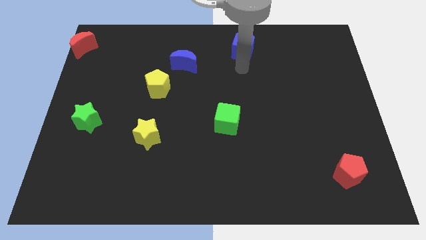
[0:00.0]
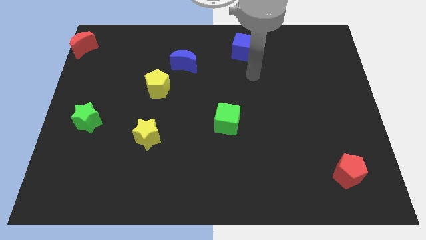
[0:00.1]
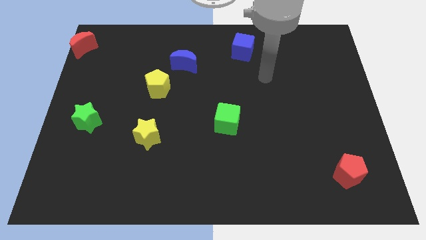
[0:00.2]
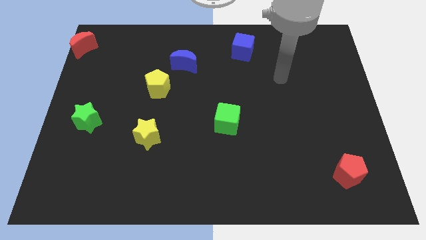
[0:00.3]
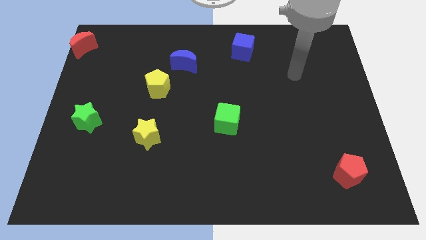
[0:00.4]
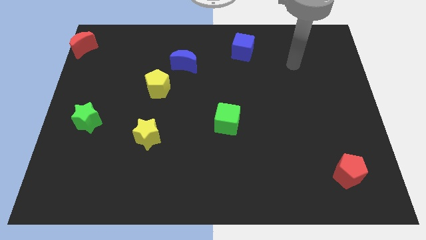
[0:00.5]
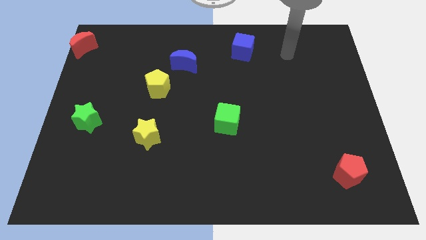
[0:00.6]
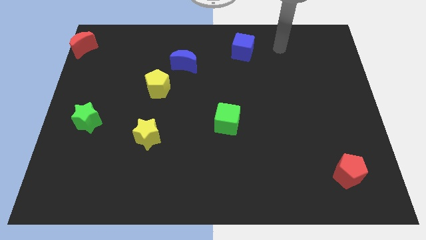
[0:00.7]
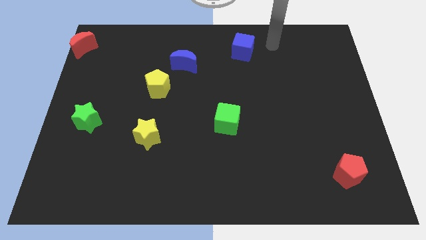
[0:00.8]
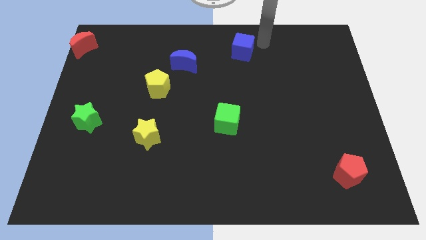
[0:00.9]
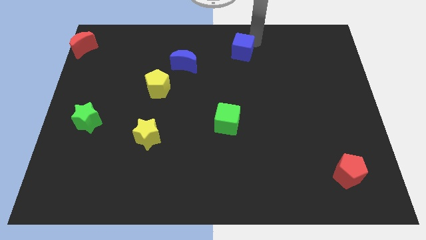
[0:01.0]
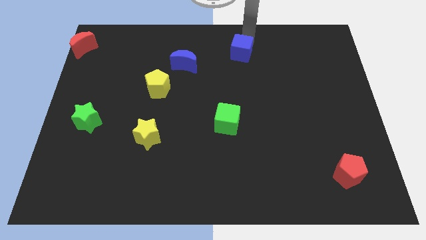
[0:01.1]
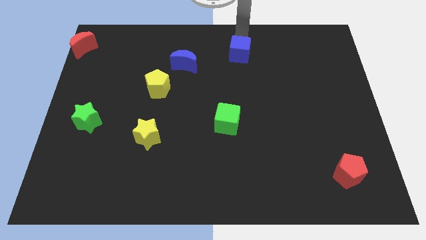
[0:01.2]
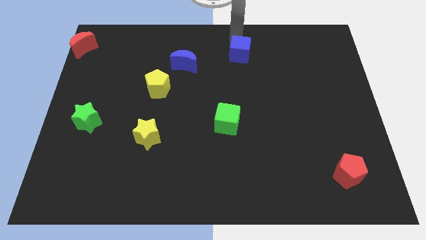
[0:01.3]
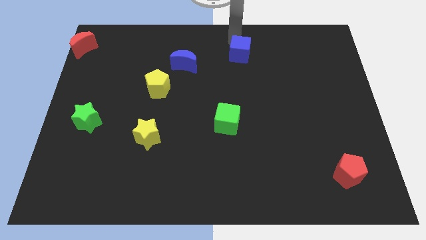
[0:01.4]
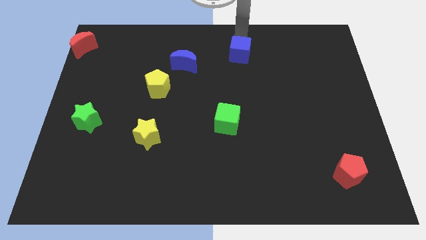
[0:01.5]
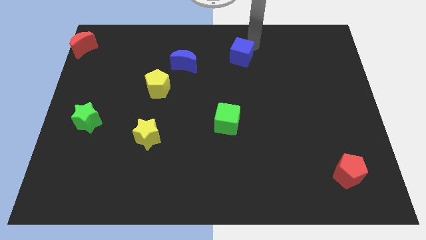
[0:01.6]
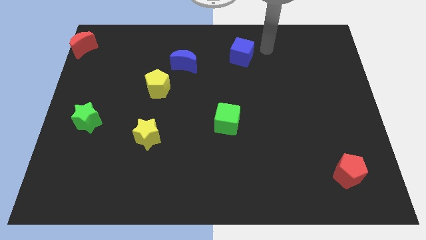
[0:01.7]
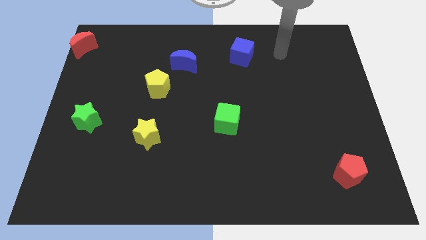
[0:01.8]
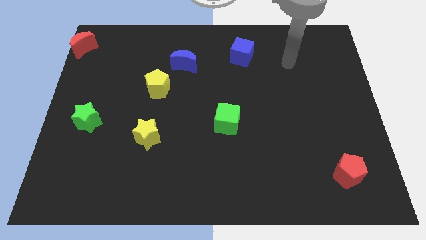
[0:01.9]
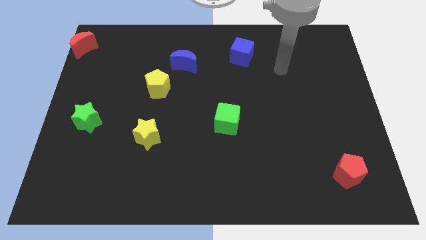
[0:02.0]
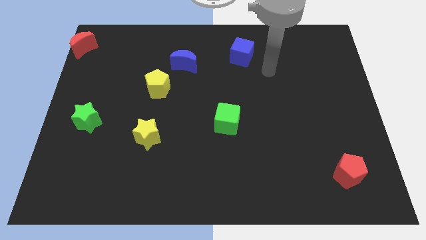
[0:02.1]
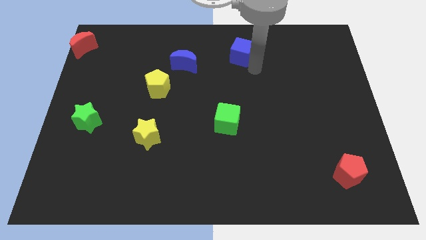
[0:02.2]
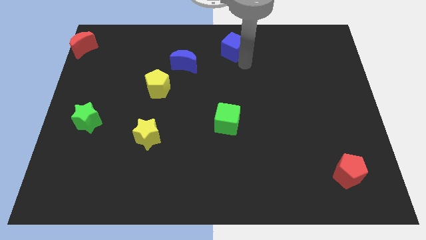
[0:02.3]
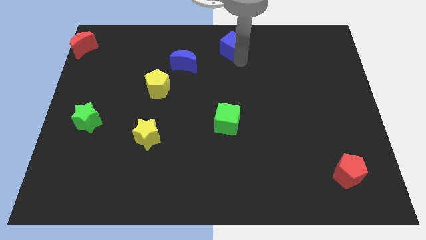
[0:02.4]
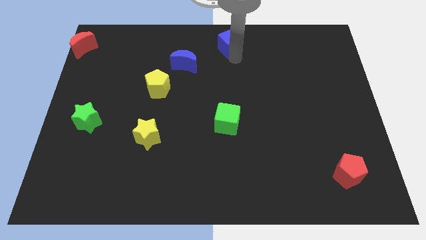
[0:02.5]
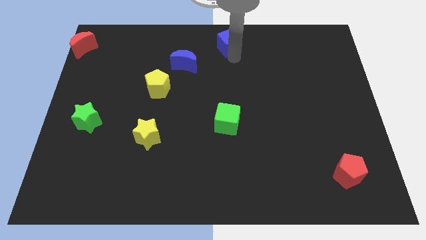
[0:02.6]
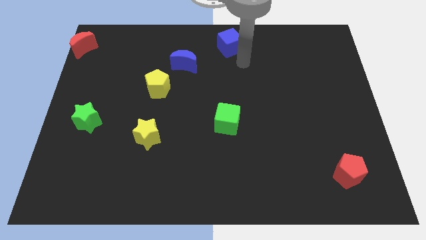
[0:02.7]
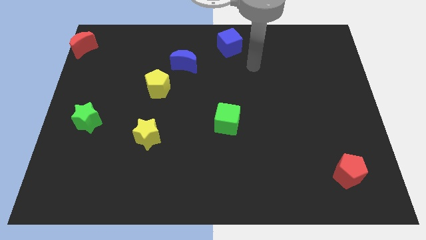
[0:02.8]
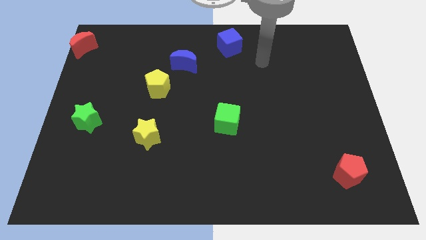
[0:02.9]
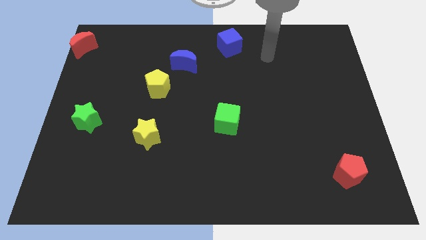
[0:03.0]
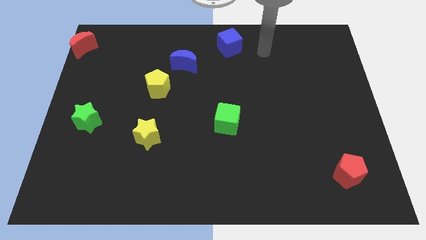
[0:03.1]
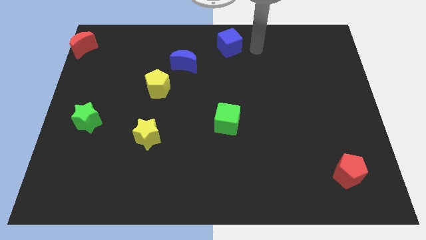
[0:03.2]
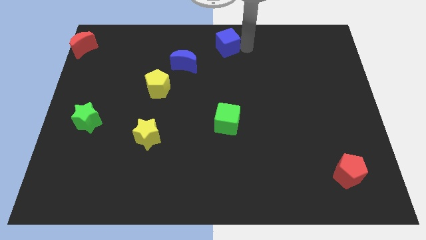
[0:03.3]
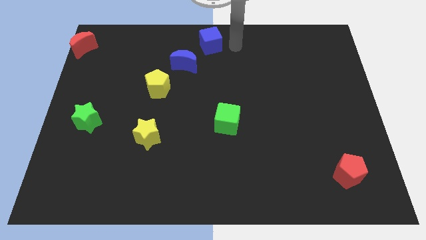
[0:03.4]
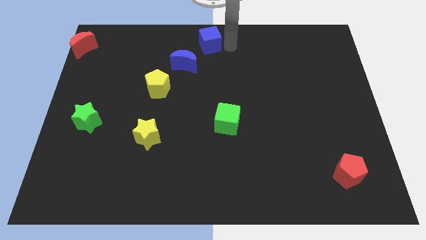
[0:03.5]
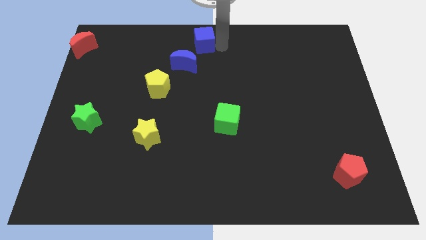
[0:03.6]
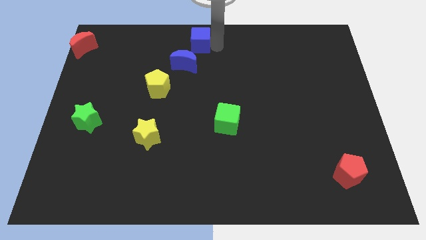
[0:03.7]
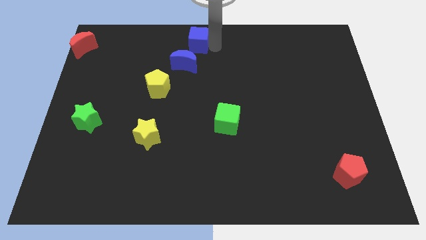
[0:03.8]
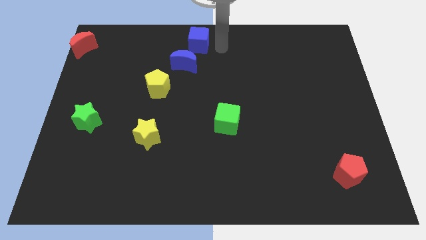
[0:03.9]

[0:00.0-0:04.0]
move the blue cube diagonally top right the blue crescent

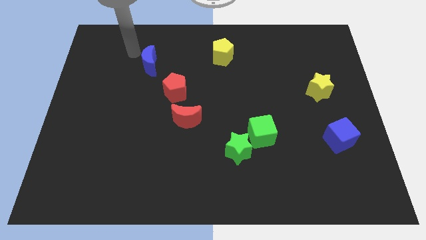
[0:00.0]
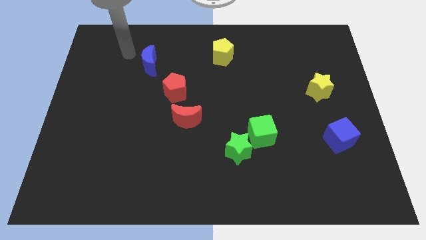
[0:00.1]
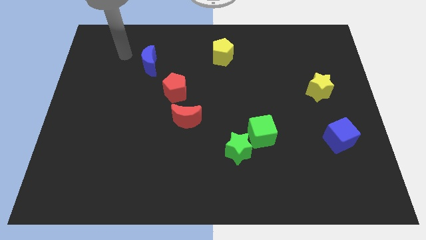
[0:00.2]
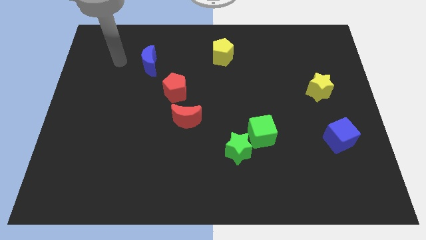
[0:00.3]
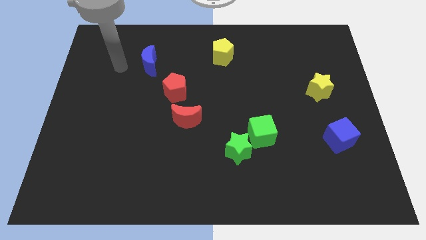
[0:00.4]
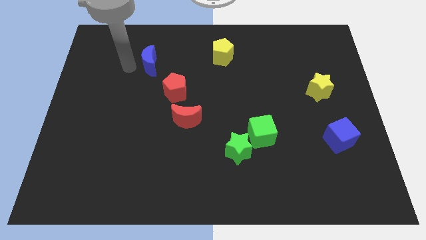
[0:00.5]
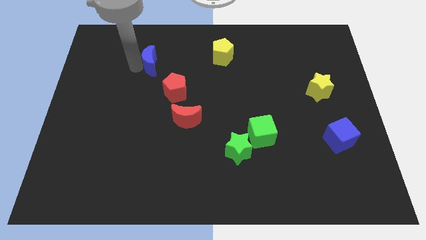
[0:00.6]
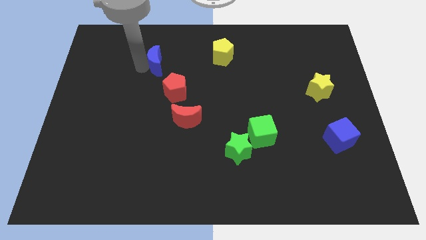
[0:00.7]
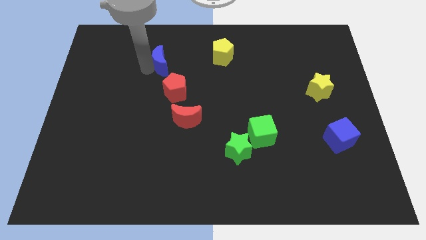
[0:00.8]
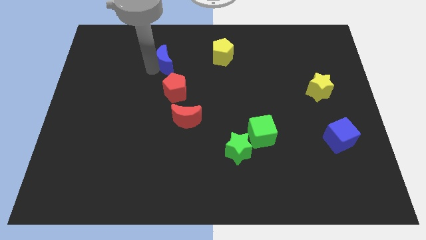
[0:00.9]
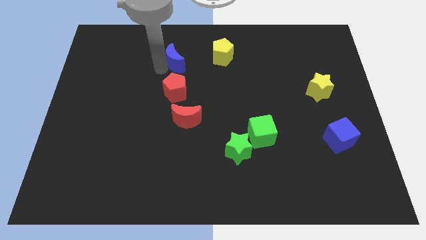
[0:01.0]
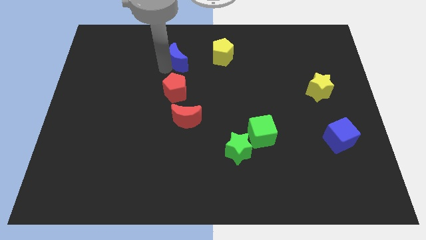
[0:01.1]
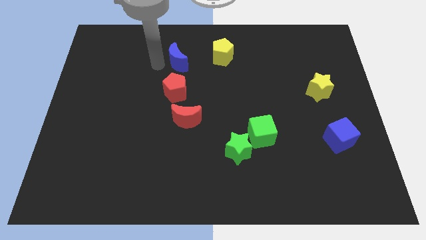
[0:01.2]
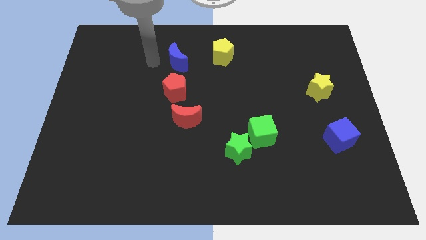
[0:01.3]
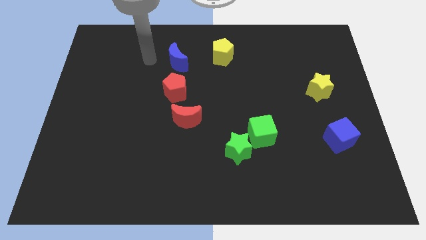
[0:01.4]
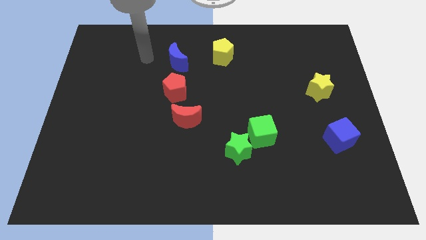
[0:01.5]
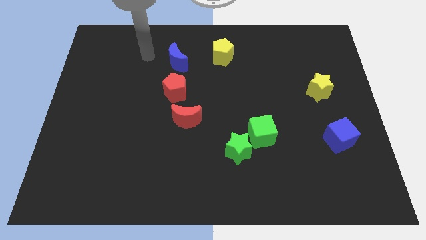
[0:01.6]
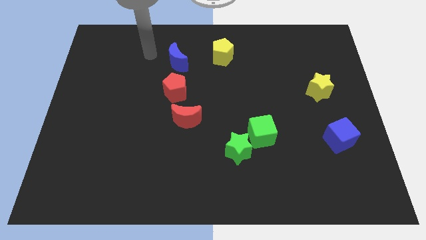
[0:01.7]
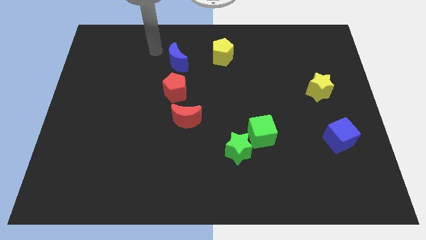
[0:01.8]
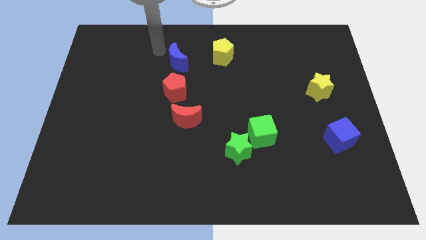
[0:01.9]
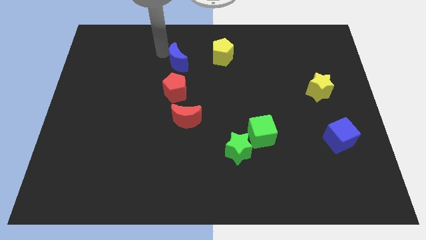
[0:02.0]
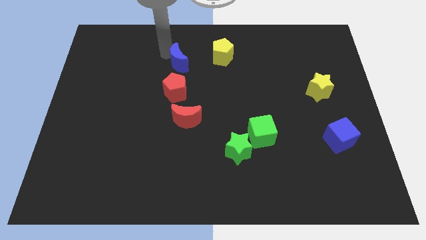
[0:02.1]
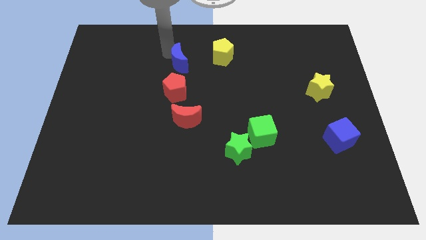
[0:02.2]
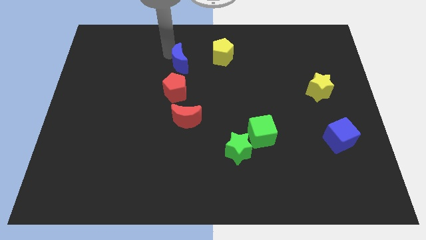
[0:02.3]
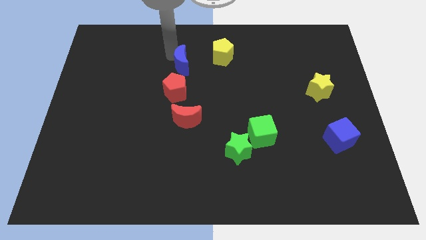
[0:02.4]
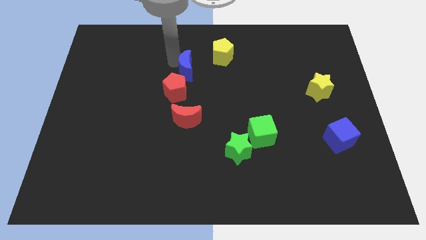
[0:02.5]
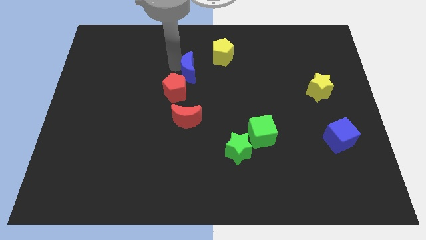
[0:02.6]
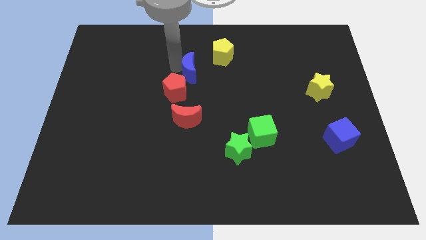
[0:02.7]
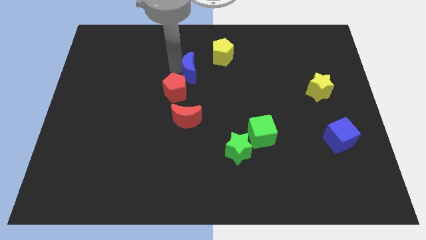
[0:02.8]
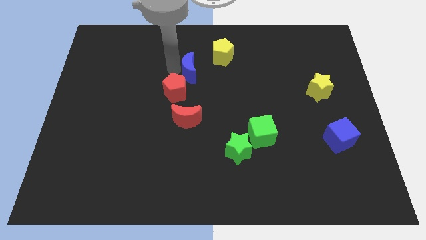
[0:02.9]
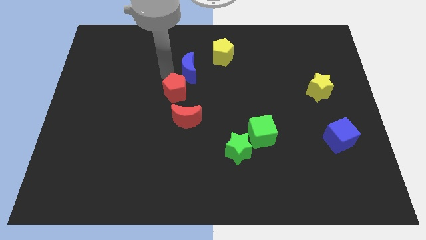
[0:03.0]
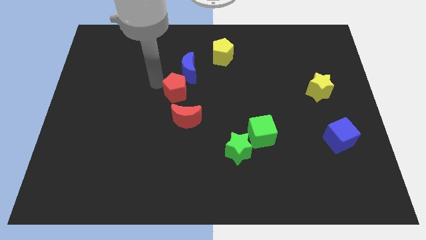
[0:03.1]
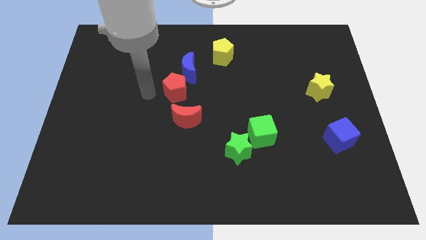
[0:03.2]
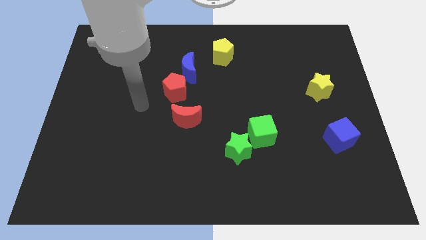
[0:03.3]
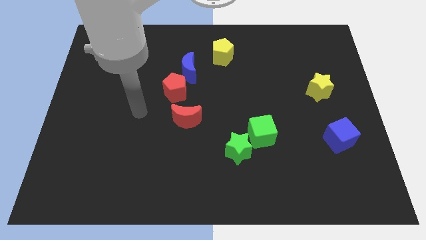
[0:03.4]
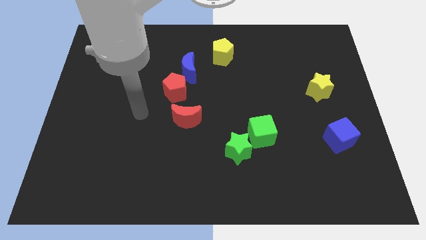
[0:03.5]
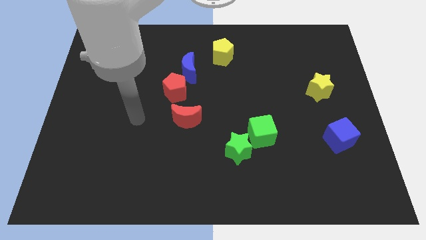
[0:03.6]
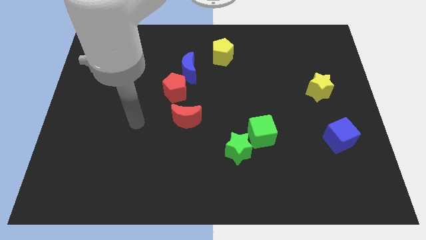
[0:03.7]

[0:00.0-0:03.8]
place the blue crescent in between the yellow pentagon and red pentagon

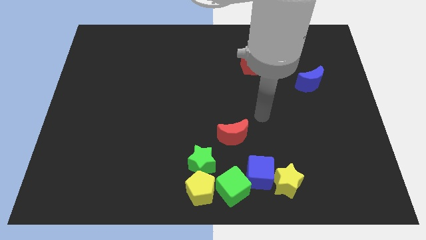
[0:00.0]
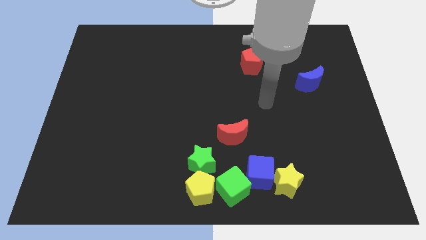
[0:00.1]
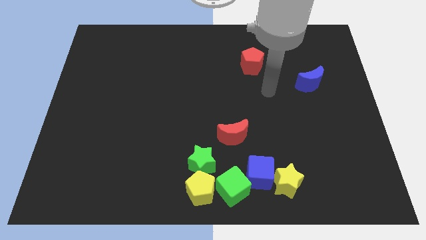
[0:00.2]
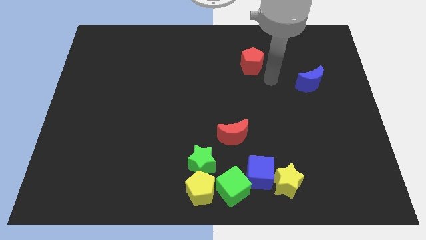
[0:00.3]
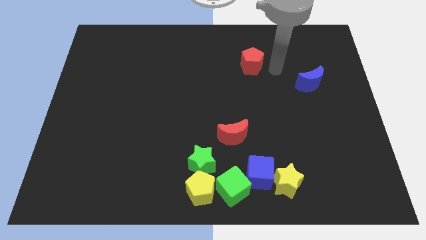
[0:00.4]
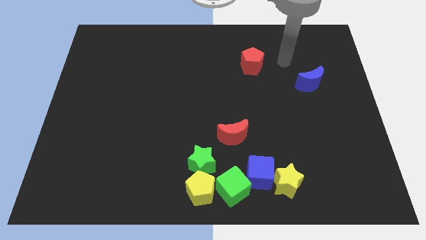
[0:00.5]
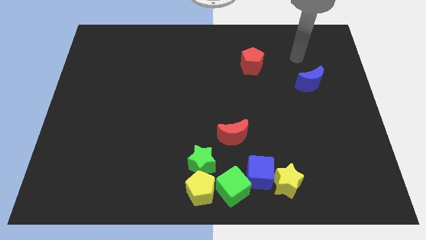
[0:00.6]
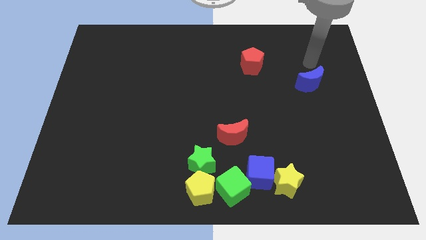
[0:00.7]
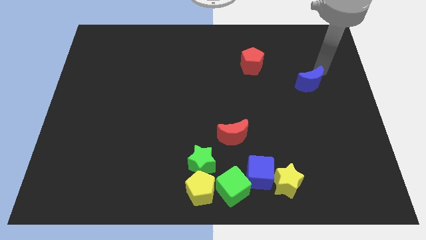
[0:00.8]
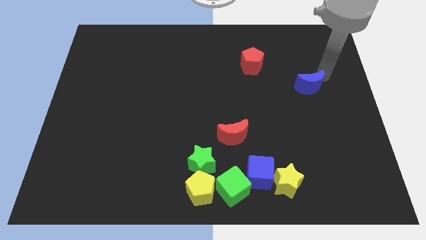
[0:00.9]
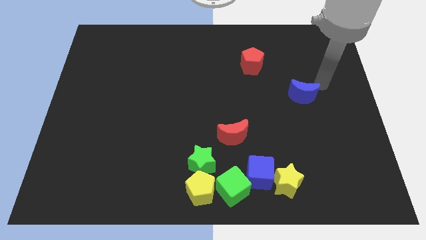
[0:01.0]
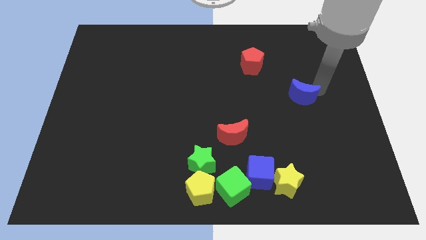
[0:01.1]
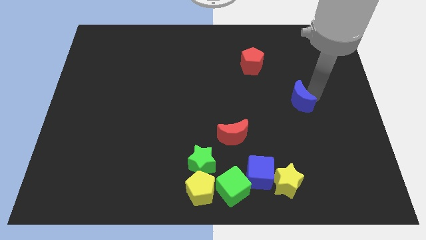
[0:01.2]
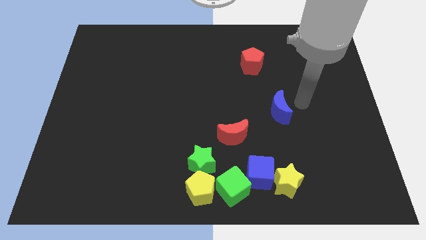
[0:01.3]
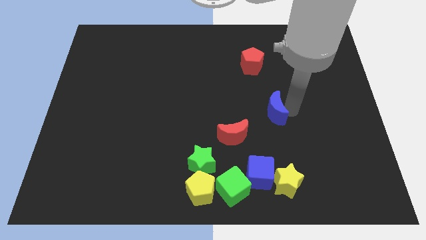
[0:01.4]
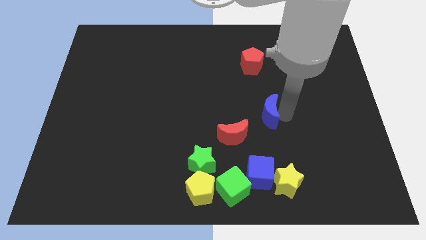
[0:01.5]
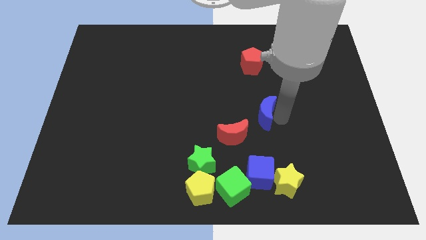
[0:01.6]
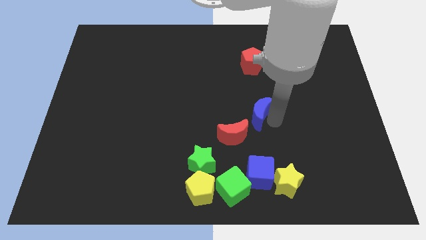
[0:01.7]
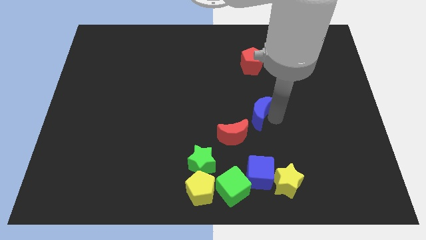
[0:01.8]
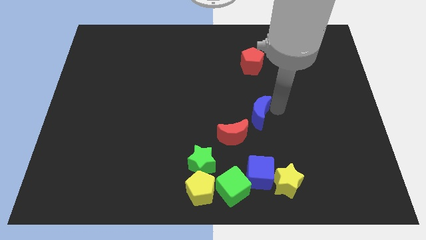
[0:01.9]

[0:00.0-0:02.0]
push the blue crescent on top of the blue cube
